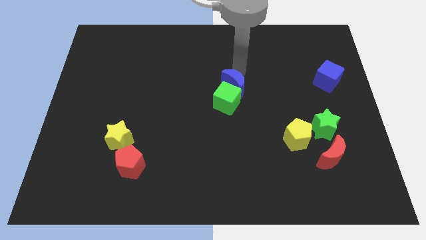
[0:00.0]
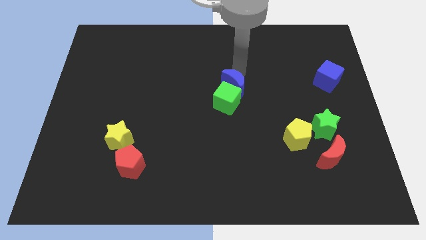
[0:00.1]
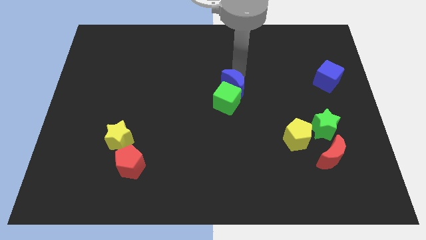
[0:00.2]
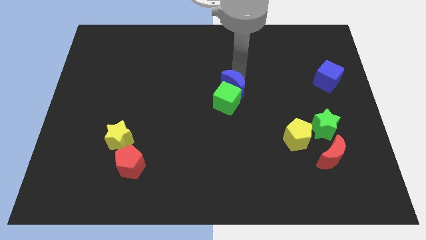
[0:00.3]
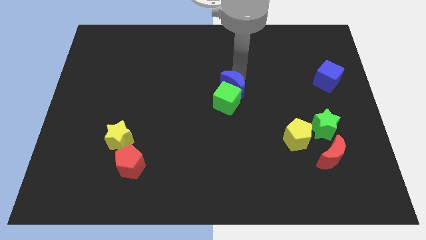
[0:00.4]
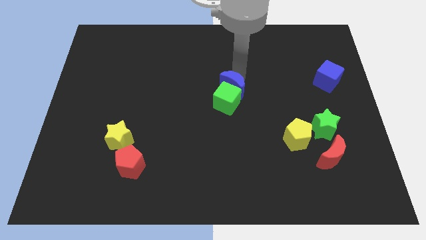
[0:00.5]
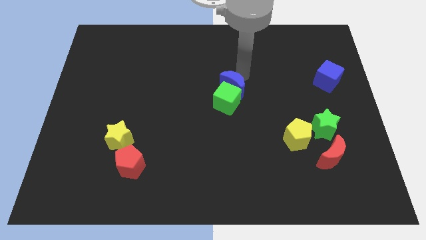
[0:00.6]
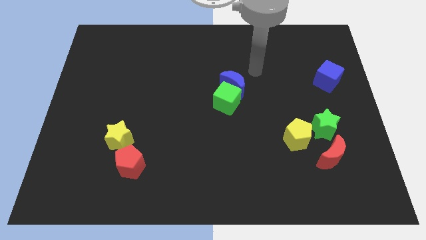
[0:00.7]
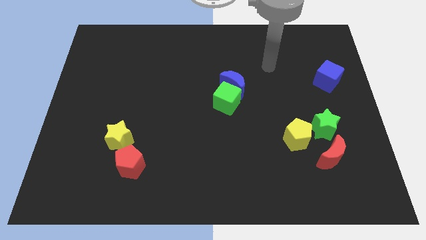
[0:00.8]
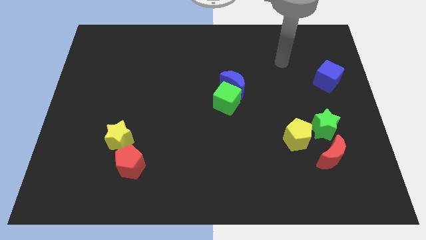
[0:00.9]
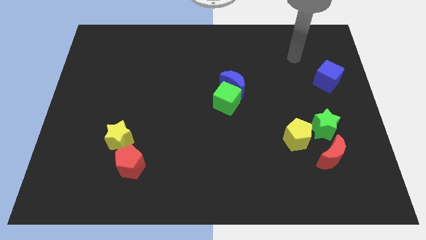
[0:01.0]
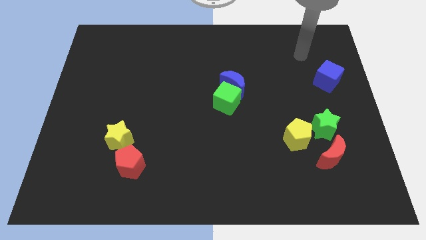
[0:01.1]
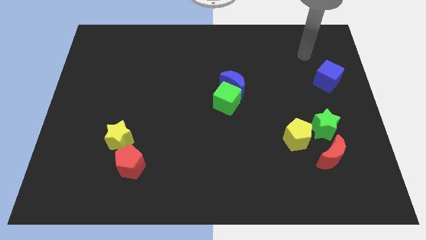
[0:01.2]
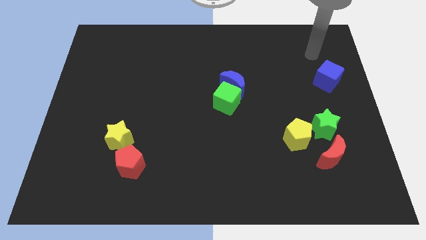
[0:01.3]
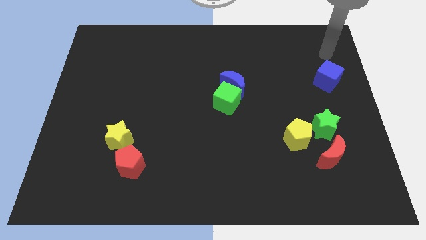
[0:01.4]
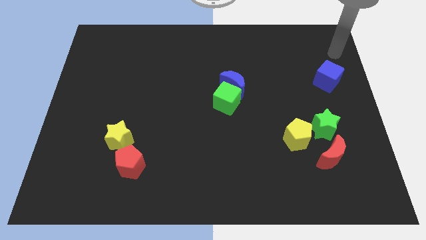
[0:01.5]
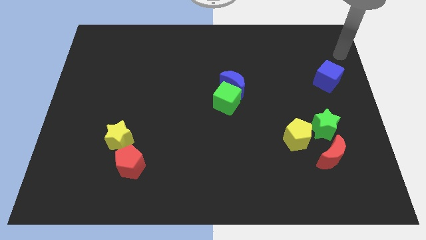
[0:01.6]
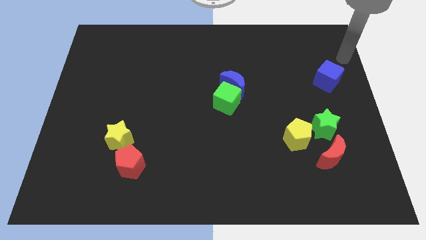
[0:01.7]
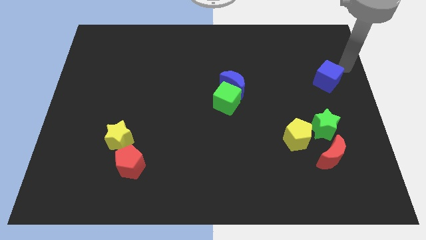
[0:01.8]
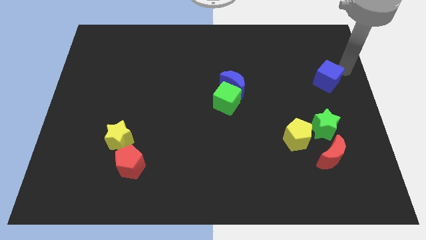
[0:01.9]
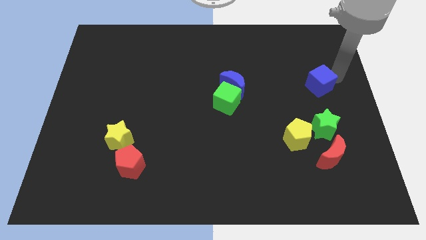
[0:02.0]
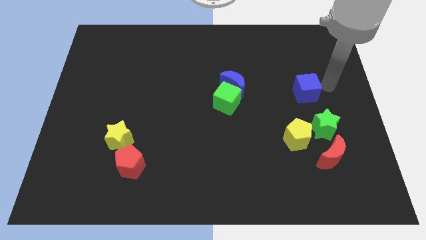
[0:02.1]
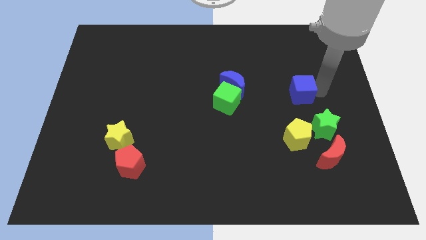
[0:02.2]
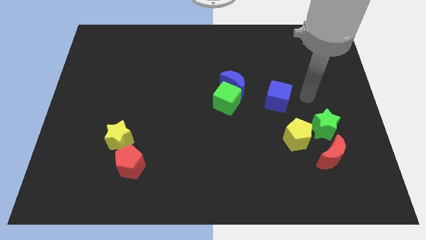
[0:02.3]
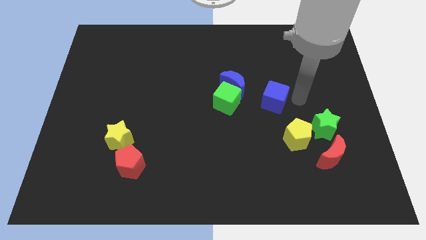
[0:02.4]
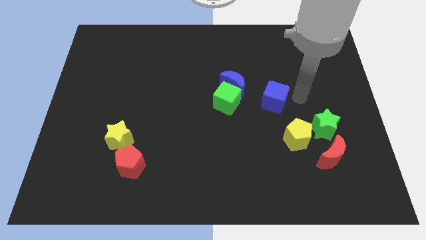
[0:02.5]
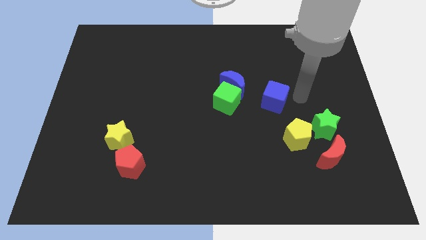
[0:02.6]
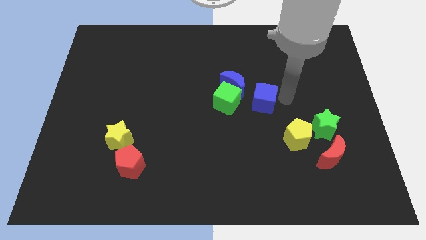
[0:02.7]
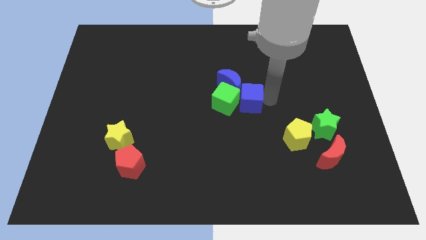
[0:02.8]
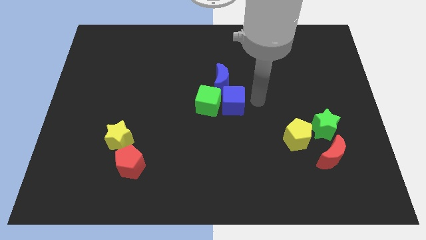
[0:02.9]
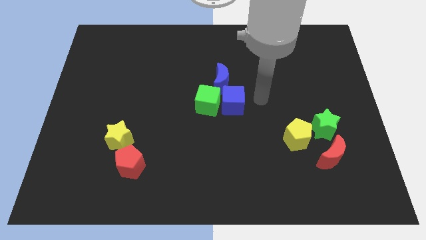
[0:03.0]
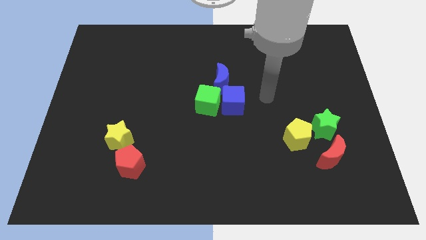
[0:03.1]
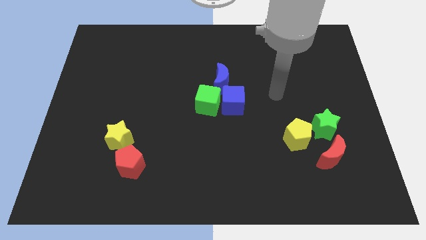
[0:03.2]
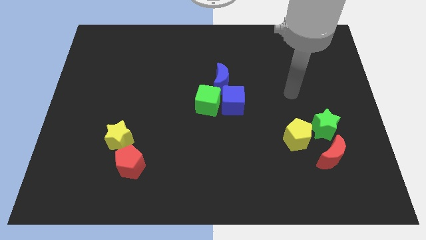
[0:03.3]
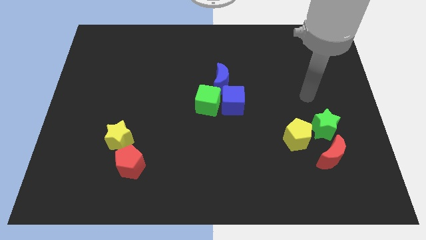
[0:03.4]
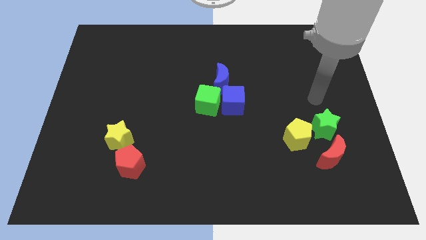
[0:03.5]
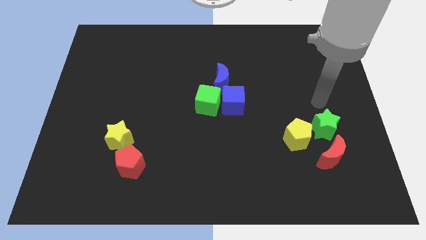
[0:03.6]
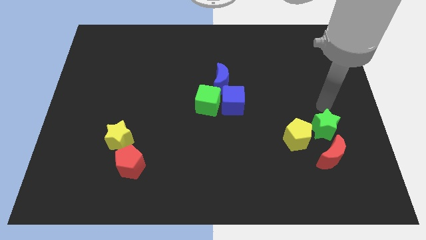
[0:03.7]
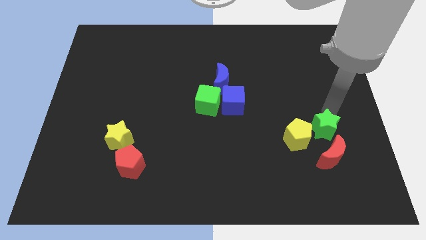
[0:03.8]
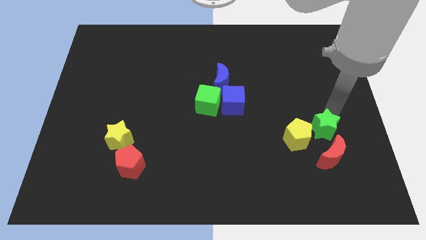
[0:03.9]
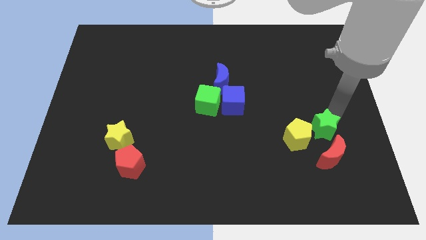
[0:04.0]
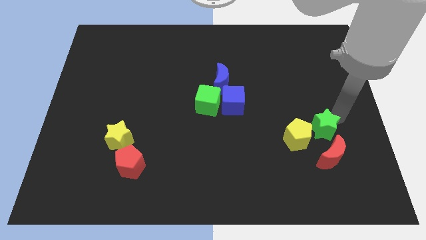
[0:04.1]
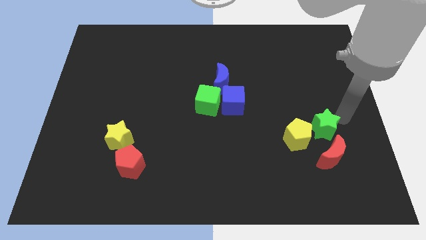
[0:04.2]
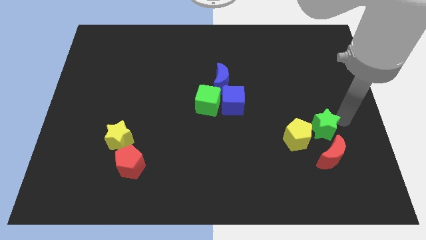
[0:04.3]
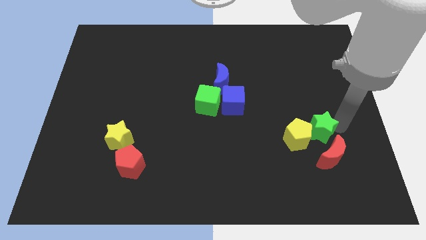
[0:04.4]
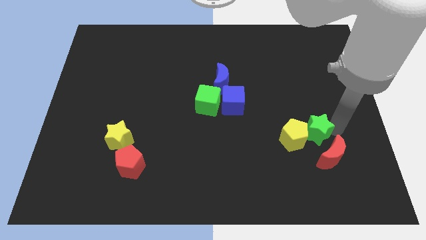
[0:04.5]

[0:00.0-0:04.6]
move the blue cube to the right of green cube

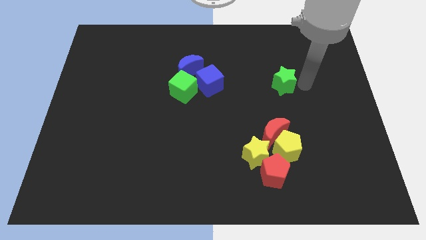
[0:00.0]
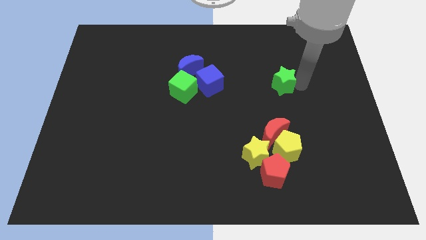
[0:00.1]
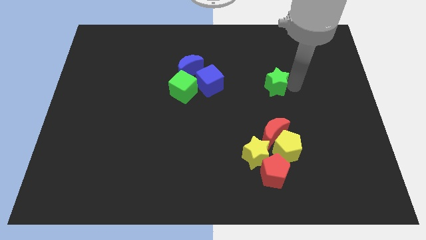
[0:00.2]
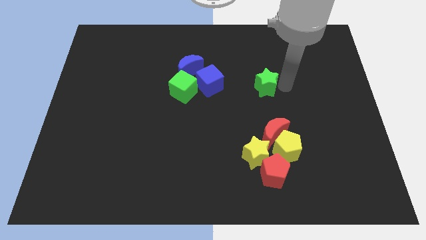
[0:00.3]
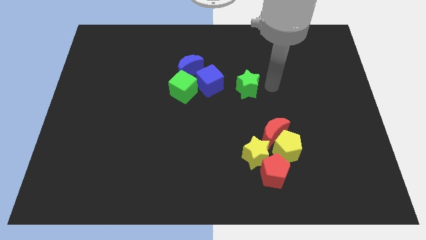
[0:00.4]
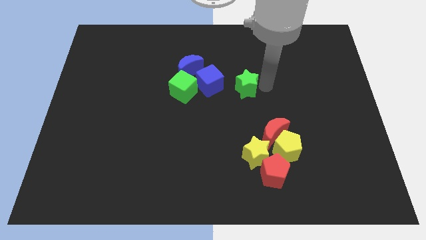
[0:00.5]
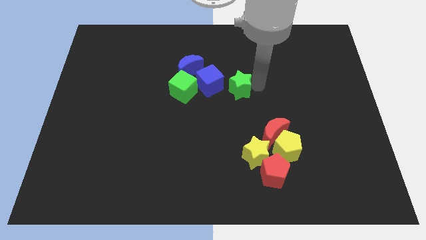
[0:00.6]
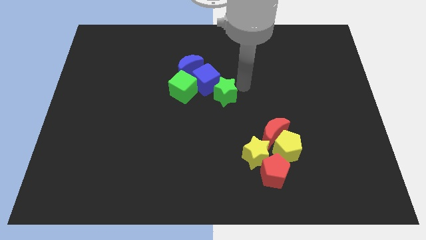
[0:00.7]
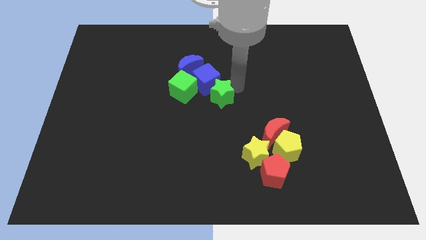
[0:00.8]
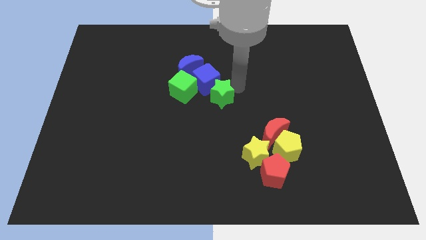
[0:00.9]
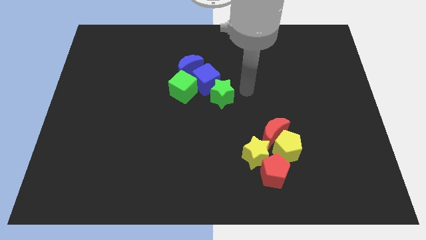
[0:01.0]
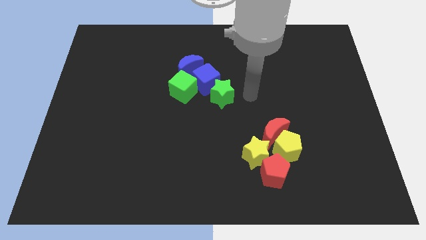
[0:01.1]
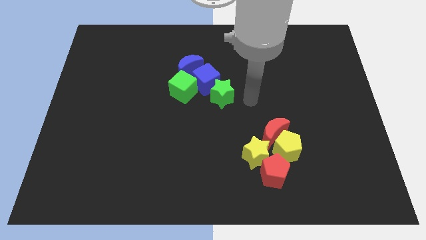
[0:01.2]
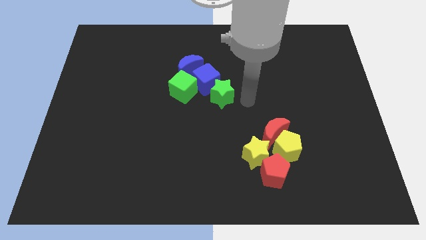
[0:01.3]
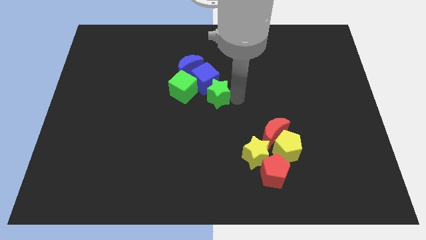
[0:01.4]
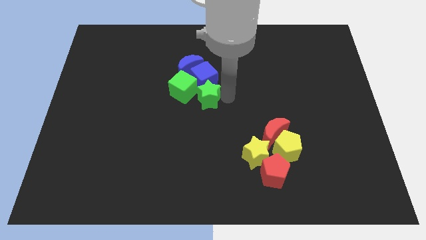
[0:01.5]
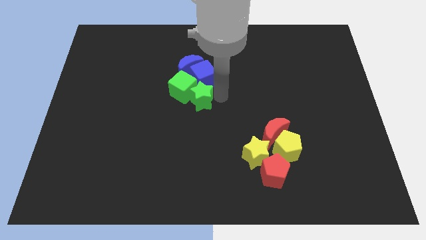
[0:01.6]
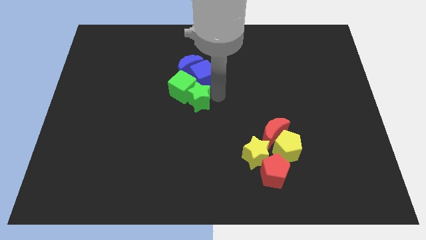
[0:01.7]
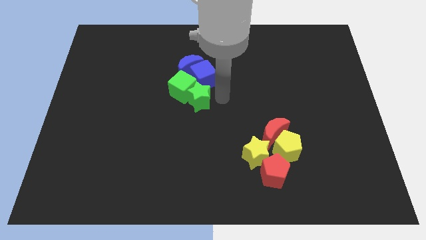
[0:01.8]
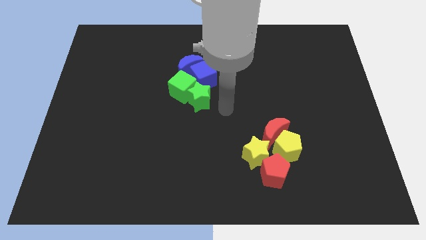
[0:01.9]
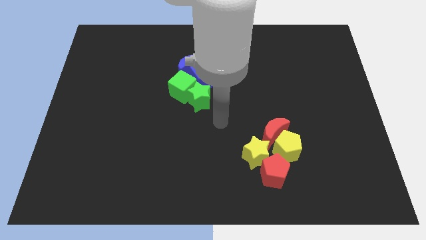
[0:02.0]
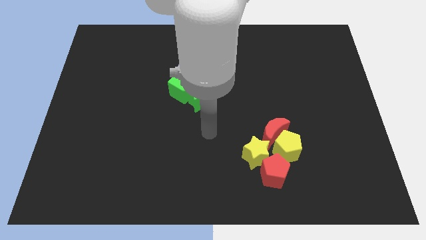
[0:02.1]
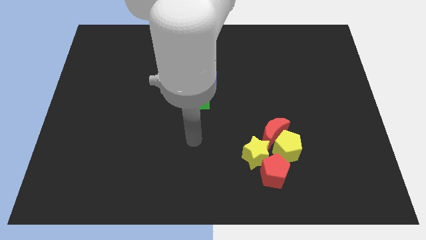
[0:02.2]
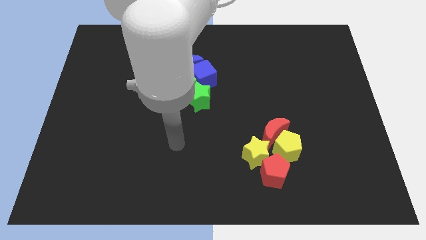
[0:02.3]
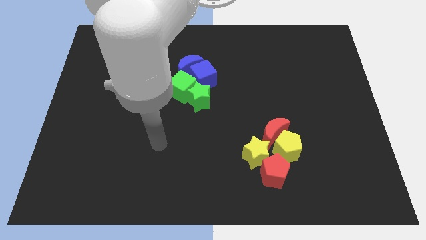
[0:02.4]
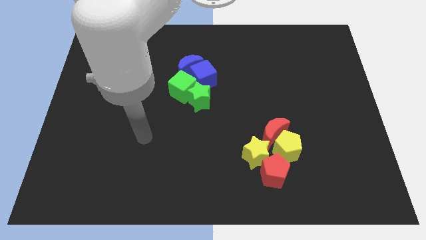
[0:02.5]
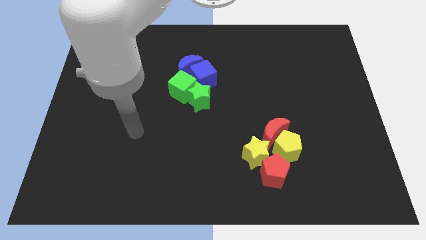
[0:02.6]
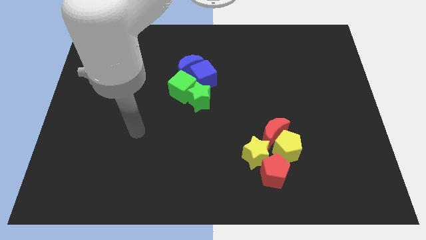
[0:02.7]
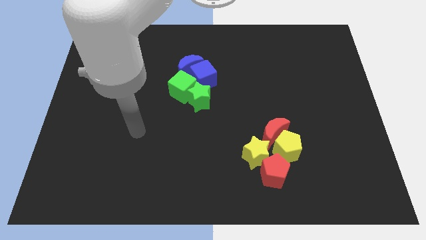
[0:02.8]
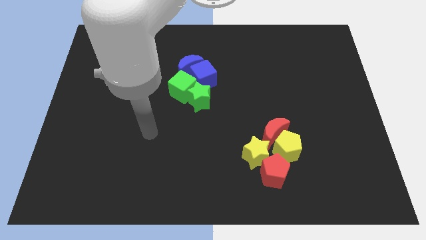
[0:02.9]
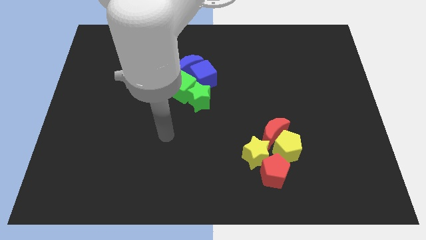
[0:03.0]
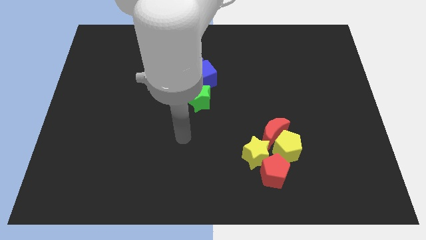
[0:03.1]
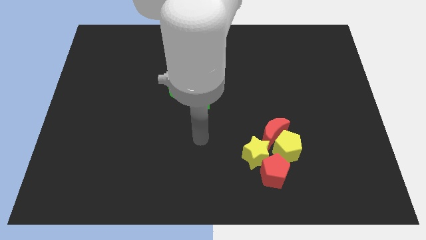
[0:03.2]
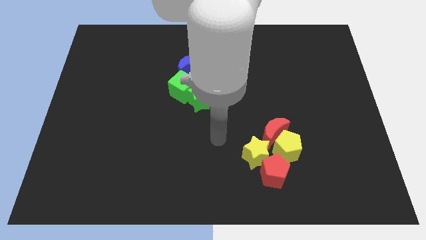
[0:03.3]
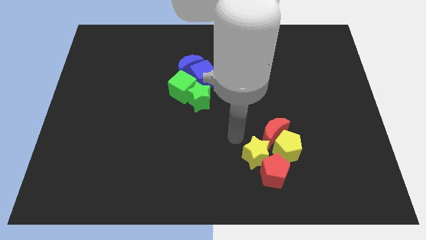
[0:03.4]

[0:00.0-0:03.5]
add the green star to the group of blue blocks and green cube

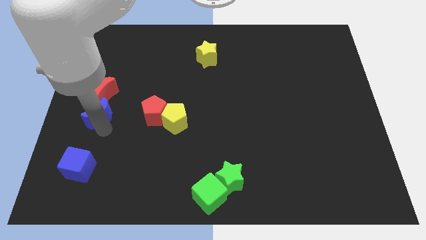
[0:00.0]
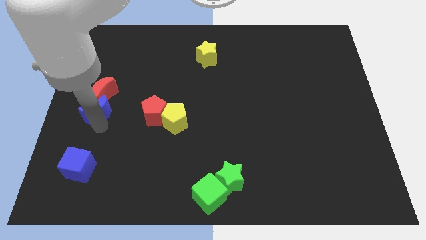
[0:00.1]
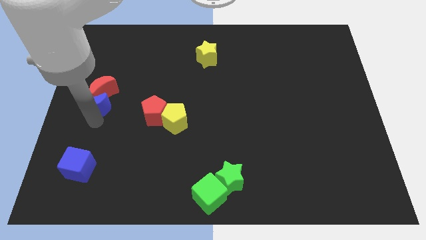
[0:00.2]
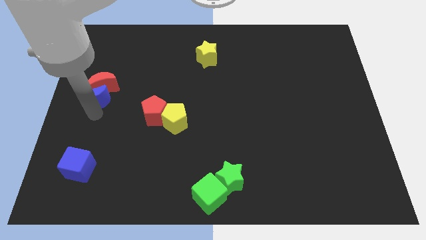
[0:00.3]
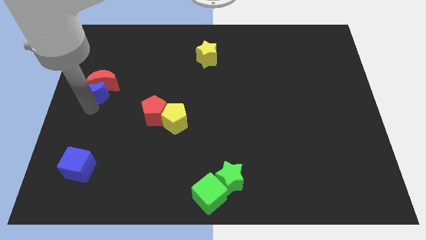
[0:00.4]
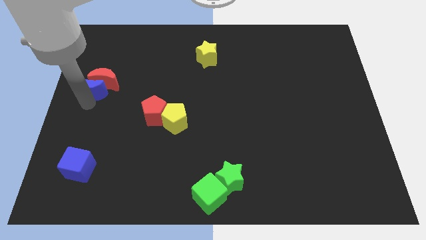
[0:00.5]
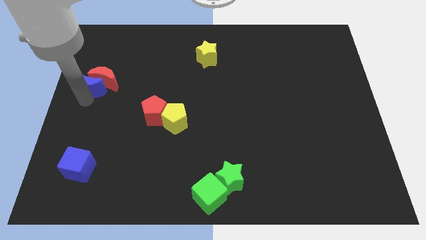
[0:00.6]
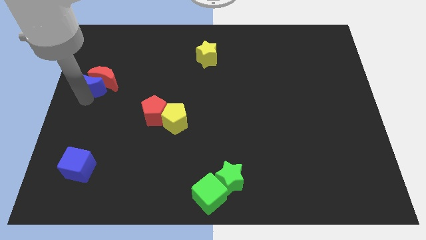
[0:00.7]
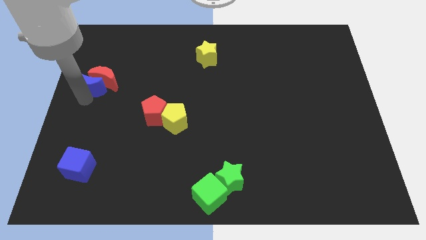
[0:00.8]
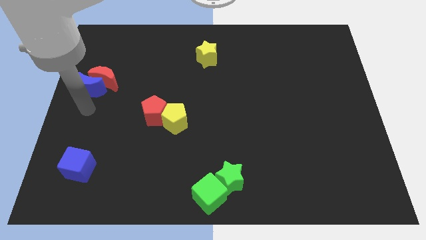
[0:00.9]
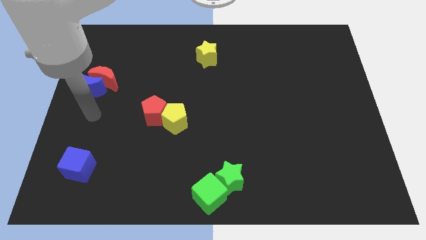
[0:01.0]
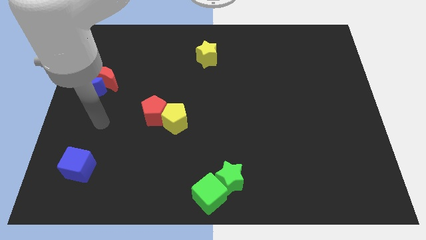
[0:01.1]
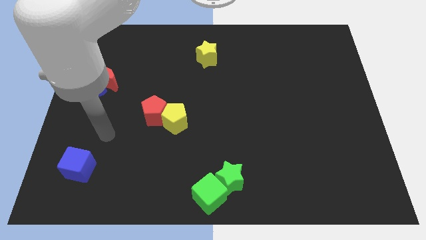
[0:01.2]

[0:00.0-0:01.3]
push the red and blue moon towards the top side
